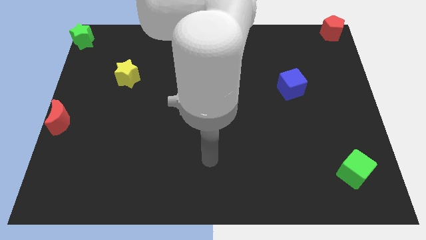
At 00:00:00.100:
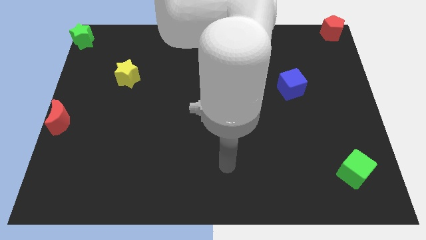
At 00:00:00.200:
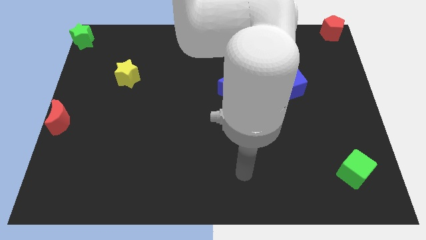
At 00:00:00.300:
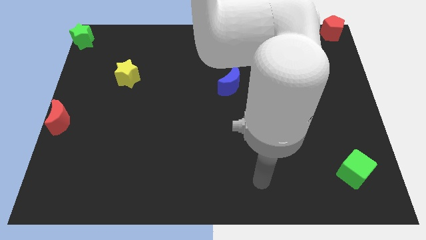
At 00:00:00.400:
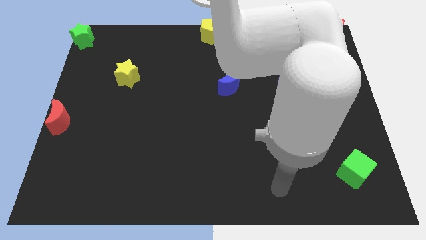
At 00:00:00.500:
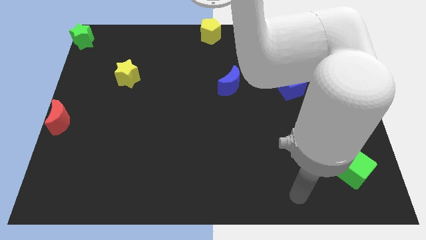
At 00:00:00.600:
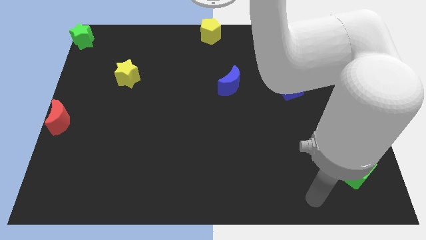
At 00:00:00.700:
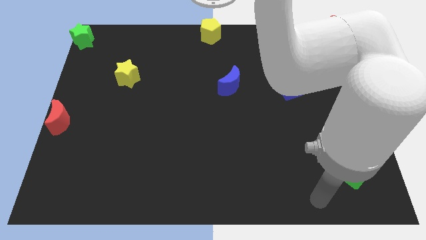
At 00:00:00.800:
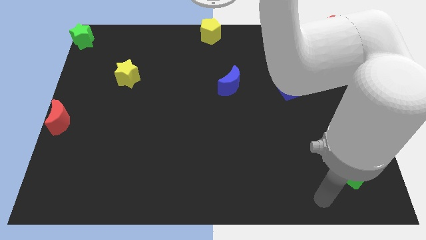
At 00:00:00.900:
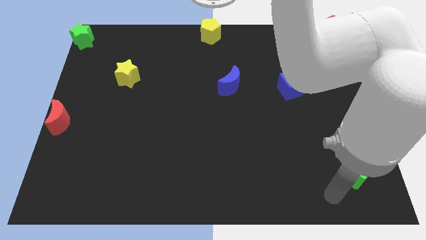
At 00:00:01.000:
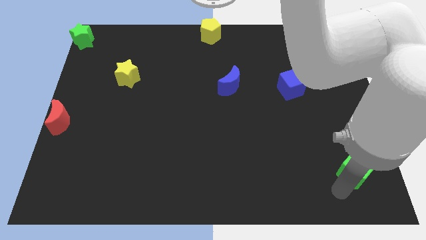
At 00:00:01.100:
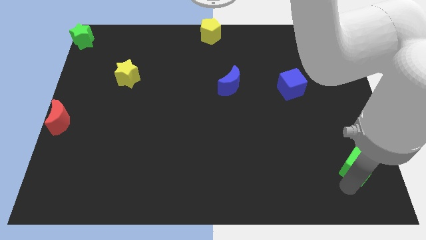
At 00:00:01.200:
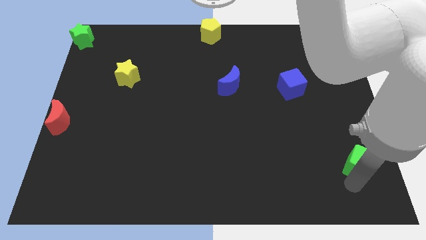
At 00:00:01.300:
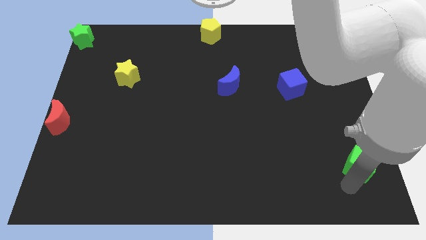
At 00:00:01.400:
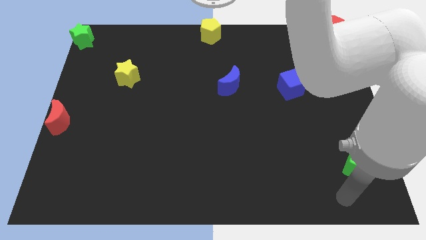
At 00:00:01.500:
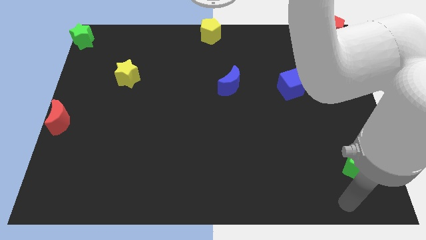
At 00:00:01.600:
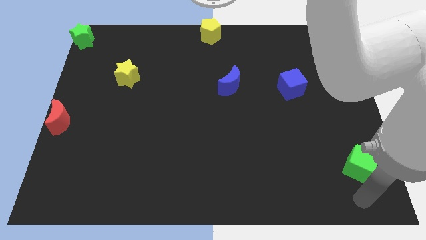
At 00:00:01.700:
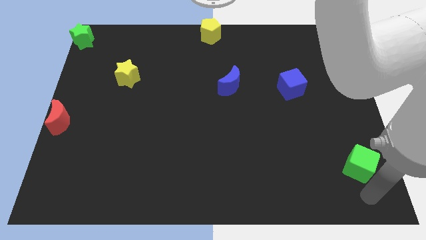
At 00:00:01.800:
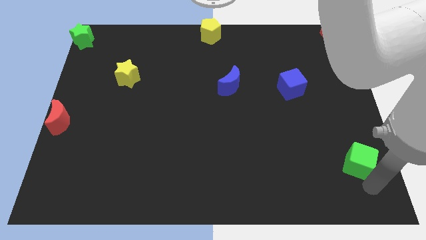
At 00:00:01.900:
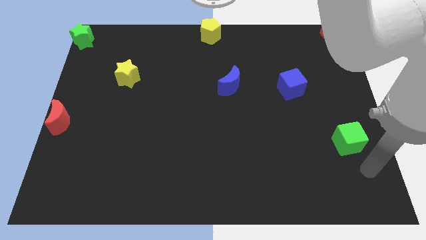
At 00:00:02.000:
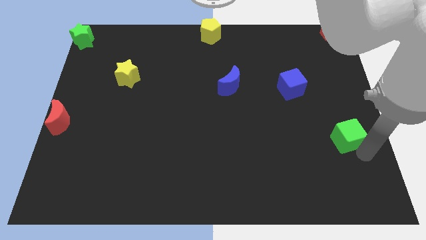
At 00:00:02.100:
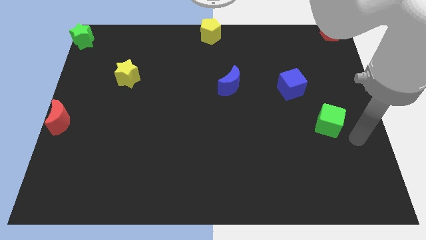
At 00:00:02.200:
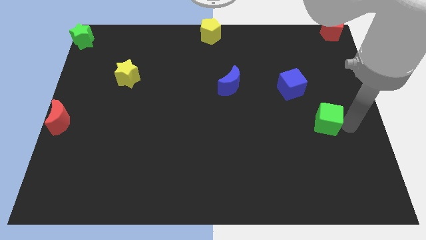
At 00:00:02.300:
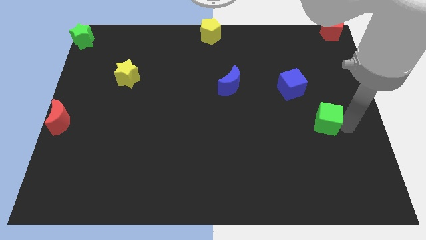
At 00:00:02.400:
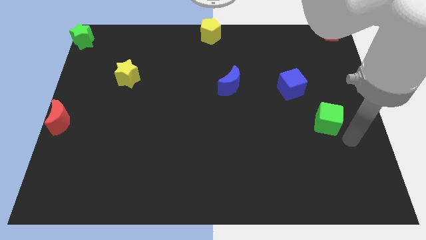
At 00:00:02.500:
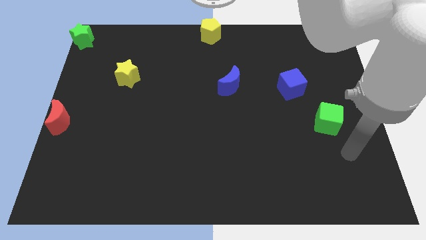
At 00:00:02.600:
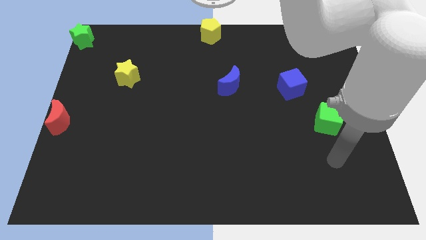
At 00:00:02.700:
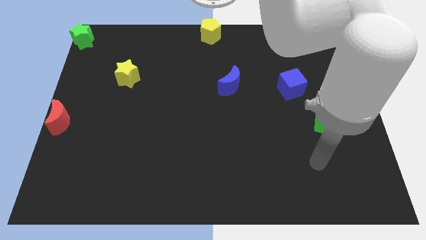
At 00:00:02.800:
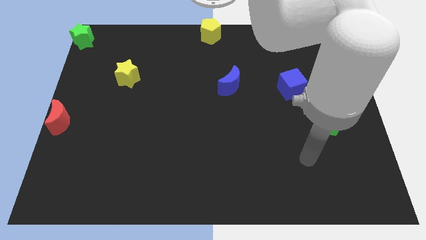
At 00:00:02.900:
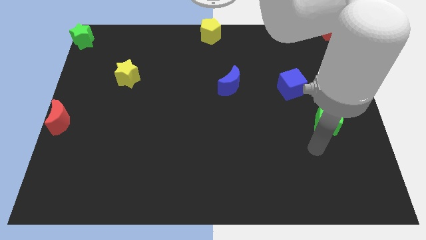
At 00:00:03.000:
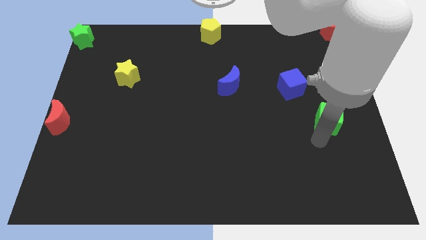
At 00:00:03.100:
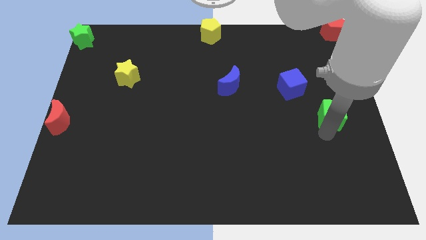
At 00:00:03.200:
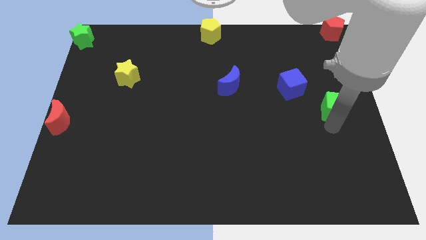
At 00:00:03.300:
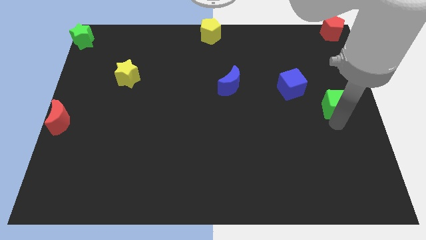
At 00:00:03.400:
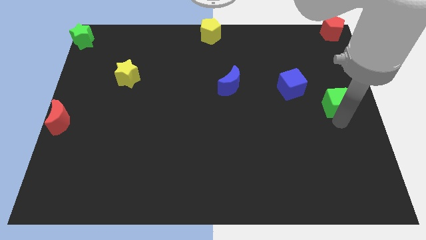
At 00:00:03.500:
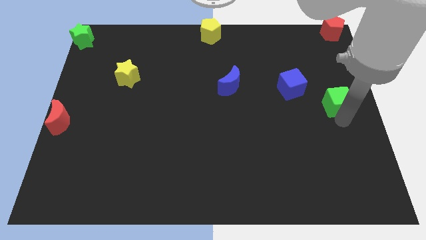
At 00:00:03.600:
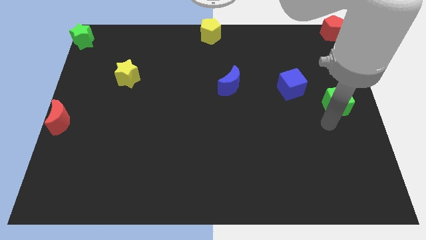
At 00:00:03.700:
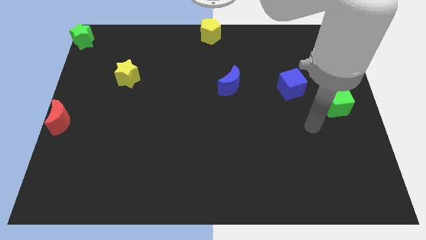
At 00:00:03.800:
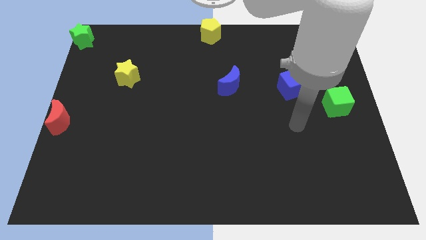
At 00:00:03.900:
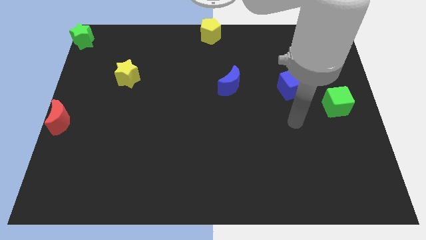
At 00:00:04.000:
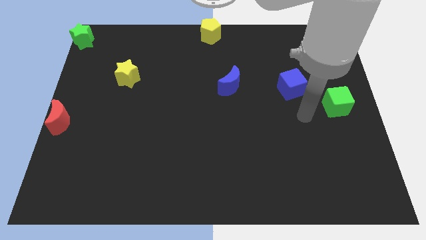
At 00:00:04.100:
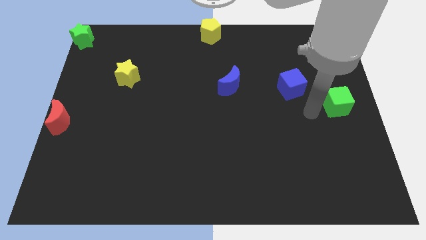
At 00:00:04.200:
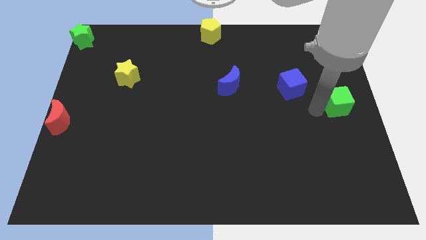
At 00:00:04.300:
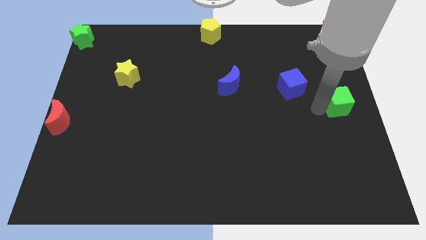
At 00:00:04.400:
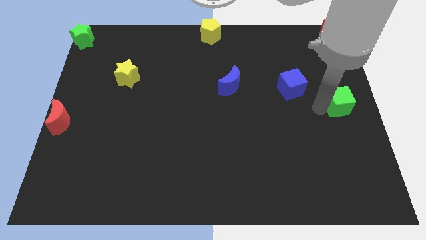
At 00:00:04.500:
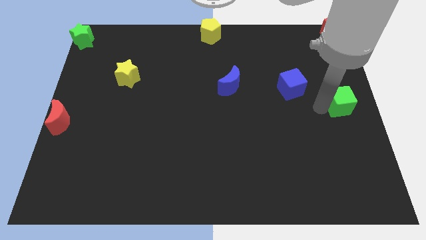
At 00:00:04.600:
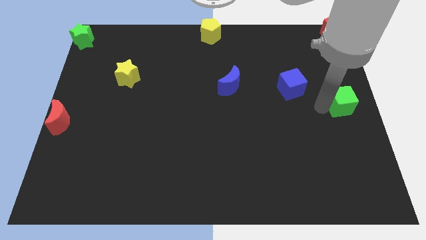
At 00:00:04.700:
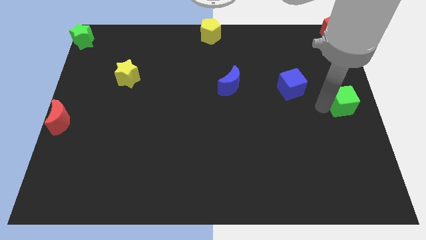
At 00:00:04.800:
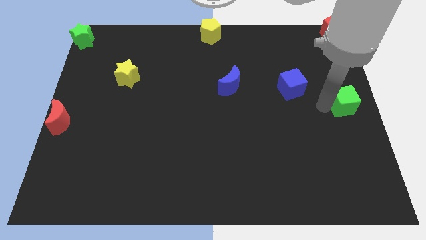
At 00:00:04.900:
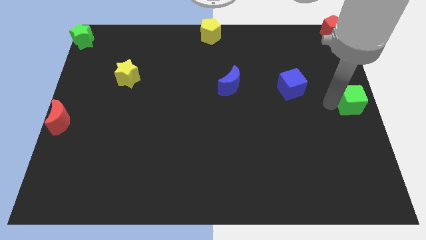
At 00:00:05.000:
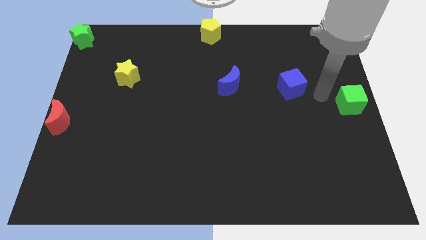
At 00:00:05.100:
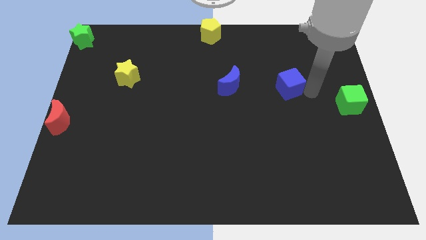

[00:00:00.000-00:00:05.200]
place the green cube to the right center of the board

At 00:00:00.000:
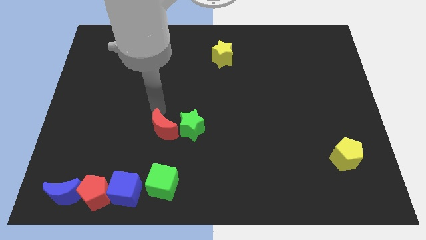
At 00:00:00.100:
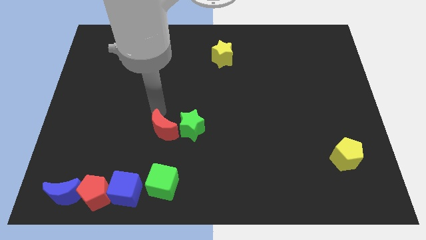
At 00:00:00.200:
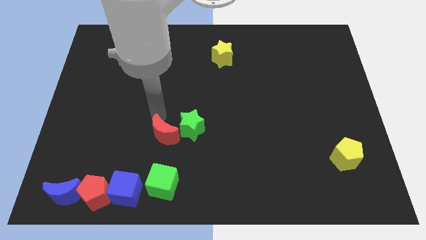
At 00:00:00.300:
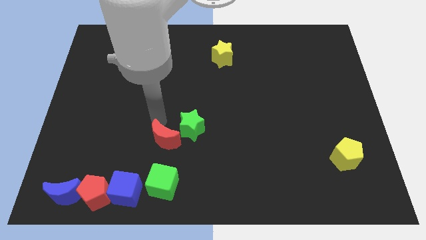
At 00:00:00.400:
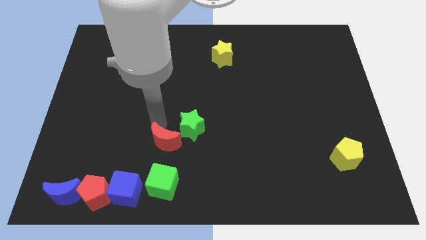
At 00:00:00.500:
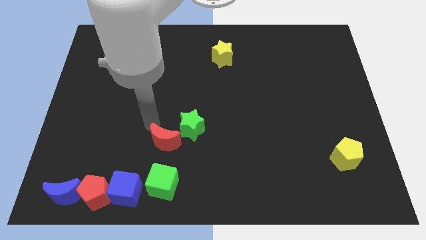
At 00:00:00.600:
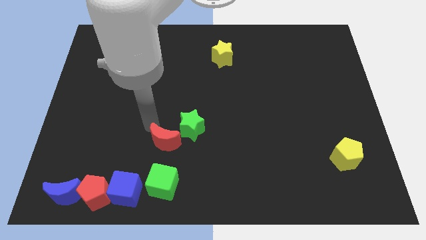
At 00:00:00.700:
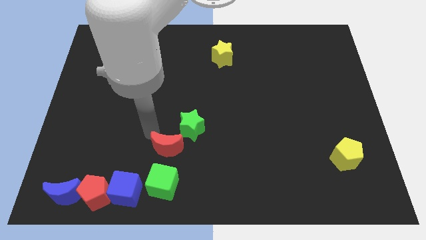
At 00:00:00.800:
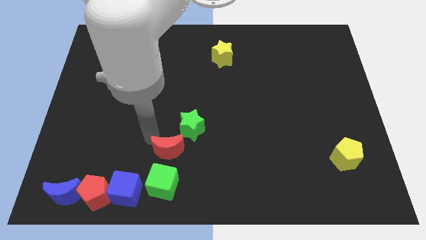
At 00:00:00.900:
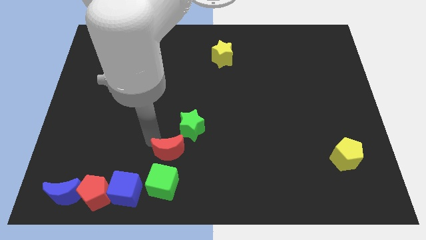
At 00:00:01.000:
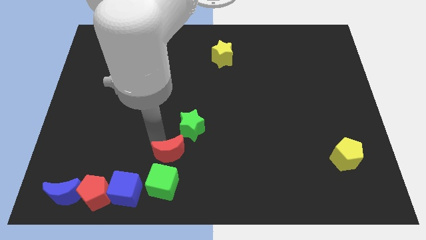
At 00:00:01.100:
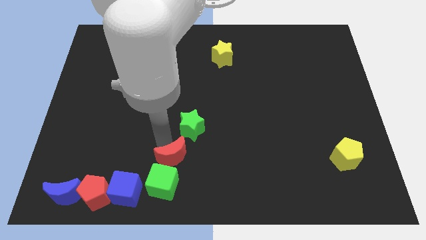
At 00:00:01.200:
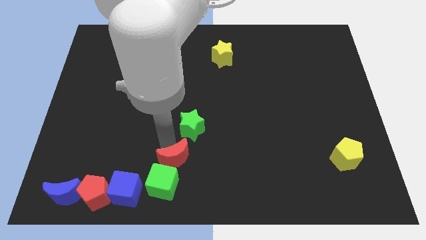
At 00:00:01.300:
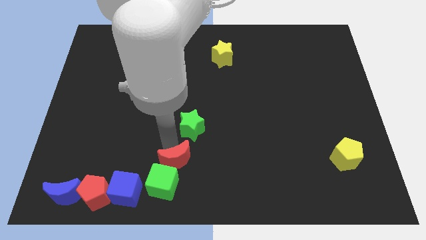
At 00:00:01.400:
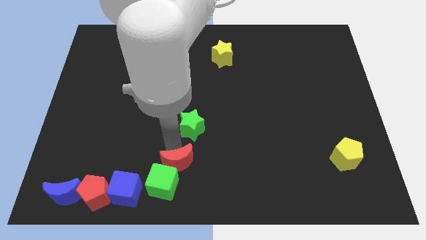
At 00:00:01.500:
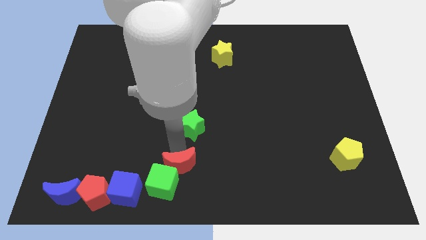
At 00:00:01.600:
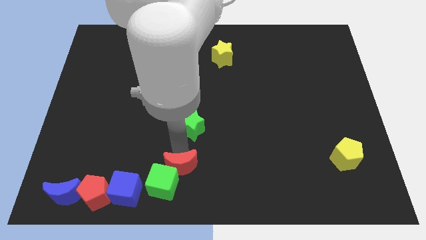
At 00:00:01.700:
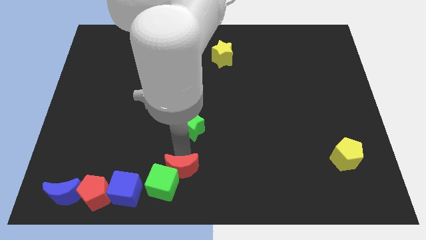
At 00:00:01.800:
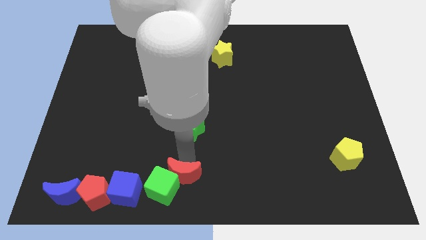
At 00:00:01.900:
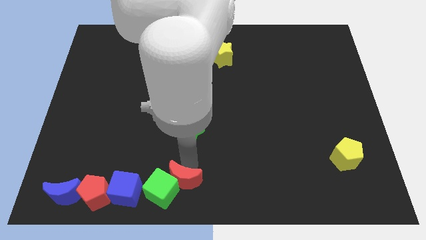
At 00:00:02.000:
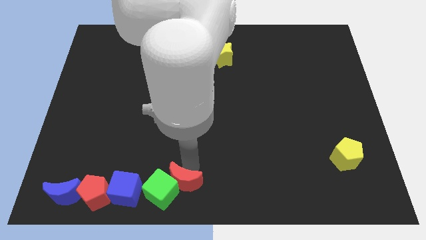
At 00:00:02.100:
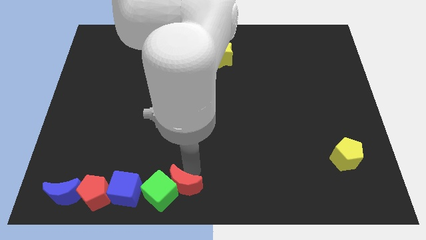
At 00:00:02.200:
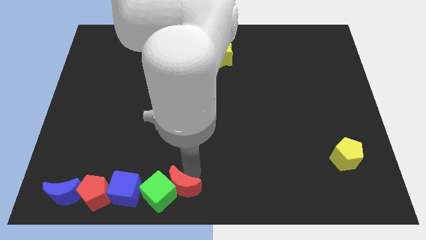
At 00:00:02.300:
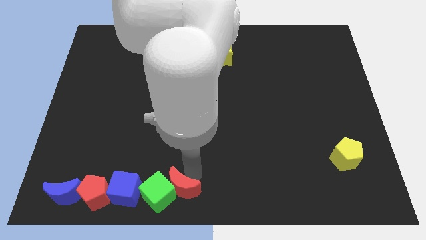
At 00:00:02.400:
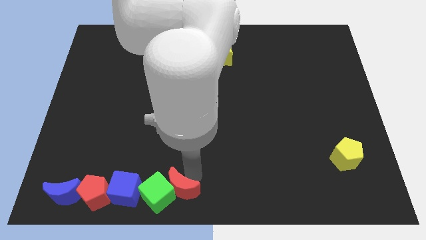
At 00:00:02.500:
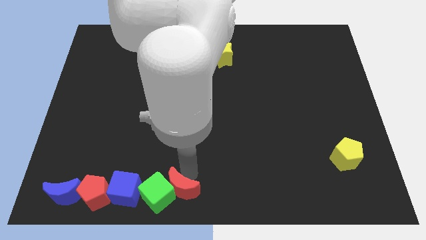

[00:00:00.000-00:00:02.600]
put the red moon to the right of green cube

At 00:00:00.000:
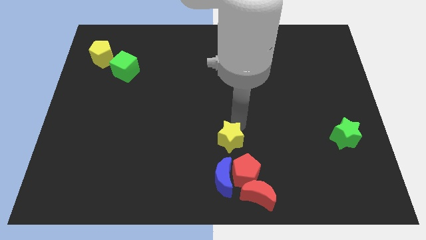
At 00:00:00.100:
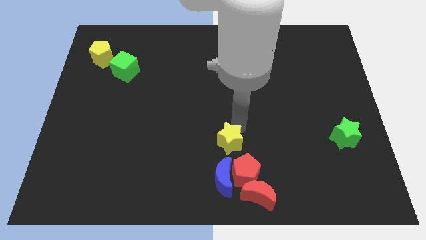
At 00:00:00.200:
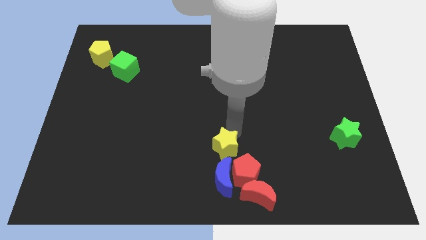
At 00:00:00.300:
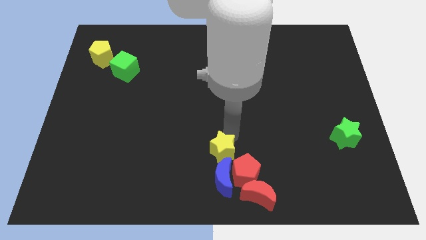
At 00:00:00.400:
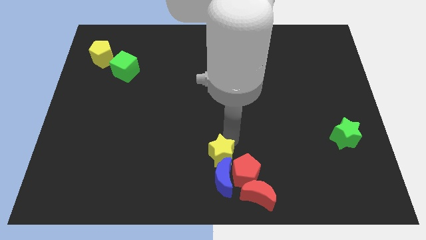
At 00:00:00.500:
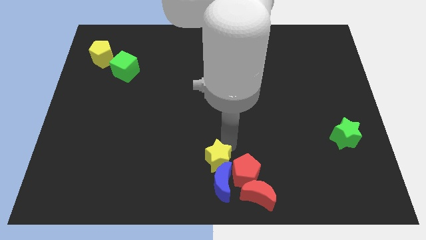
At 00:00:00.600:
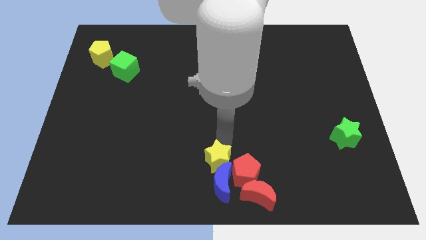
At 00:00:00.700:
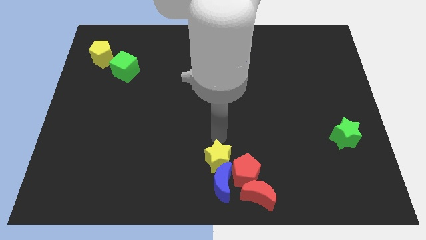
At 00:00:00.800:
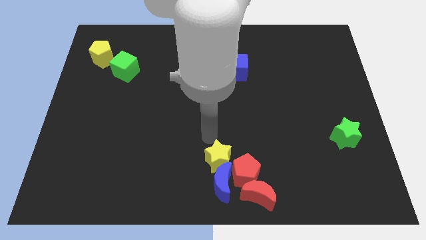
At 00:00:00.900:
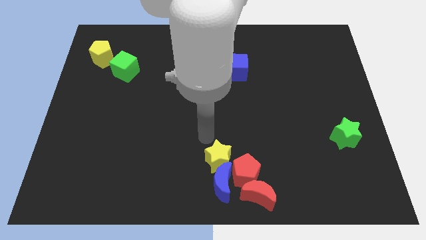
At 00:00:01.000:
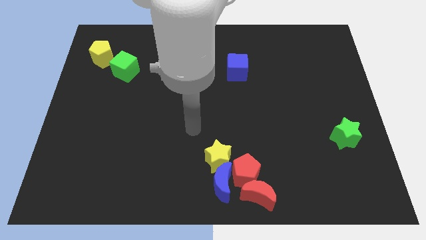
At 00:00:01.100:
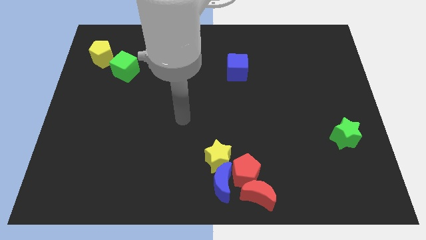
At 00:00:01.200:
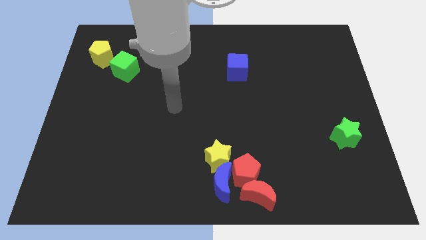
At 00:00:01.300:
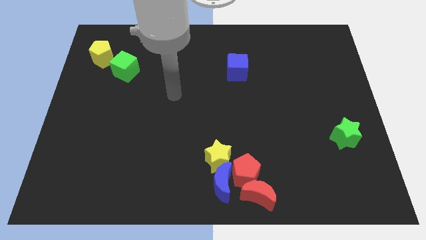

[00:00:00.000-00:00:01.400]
push yellow star into the blue moon
